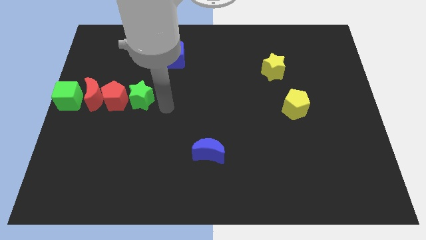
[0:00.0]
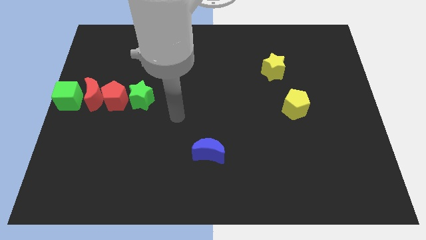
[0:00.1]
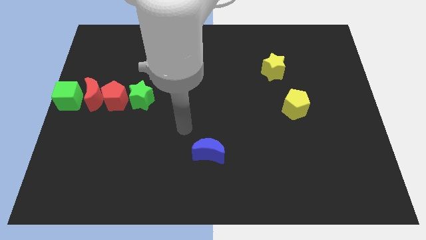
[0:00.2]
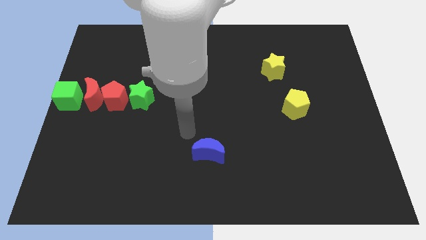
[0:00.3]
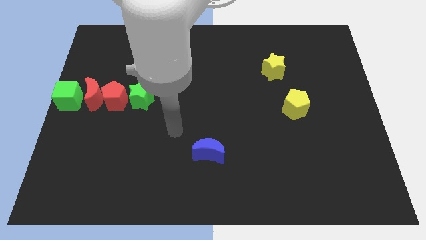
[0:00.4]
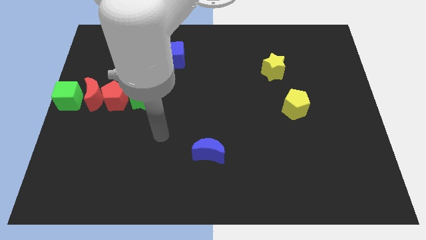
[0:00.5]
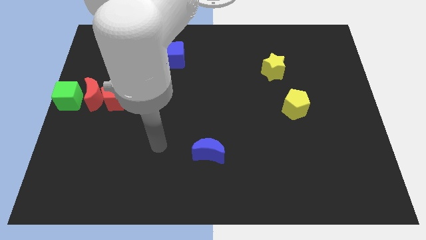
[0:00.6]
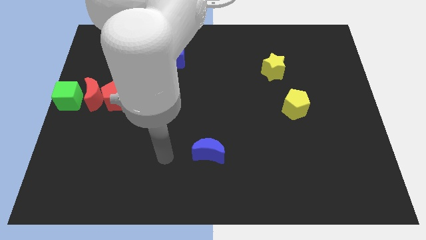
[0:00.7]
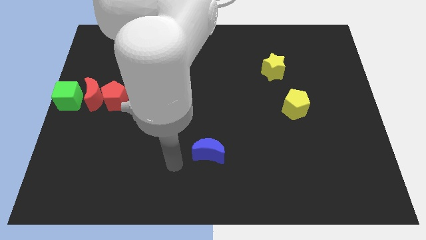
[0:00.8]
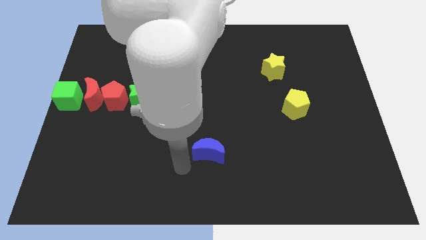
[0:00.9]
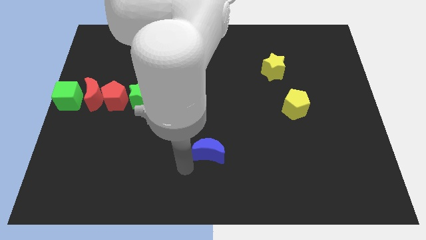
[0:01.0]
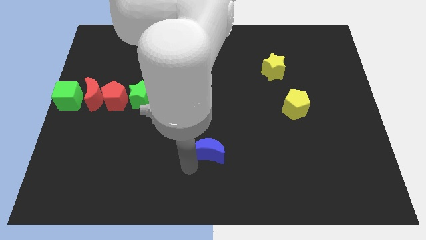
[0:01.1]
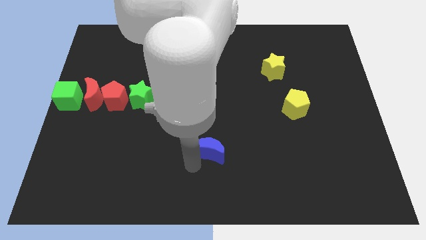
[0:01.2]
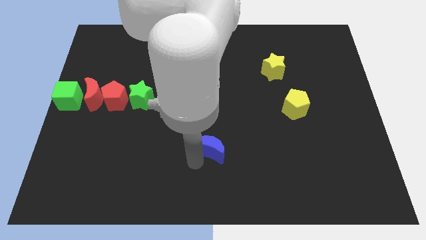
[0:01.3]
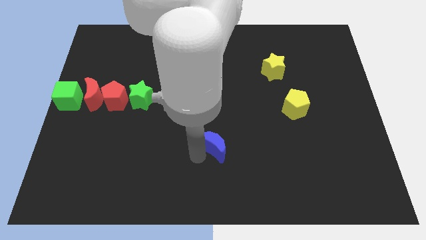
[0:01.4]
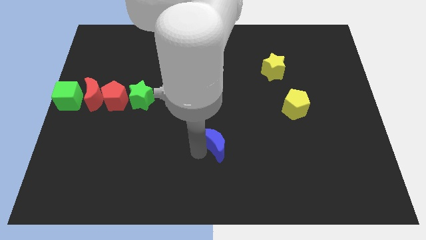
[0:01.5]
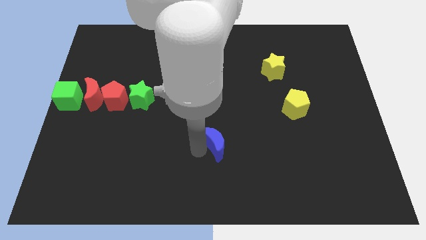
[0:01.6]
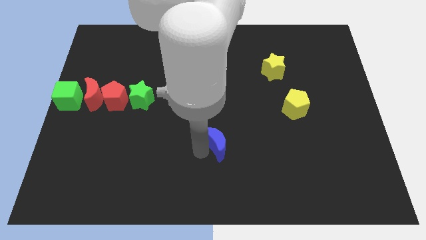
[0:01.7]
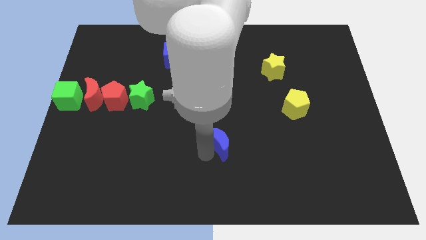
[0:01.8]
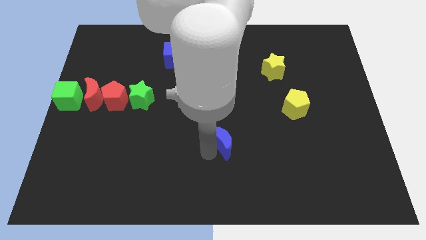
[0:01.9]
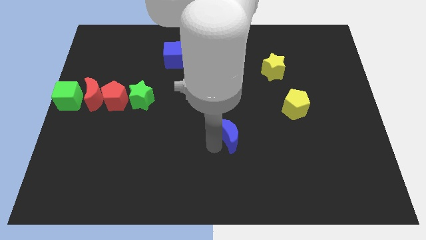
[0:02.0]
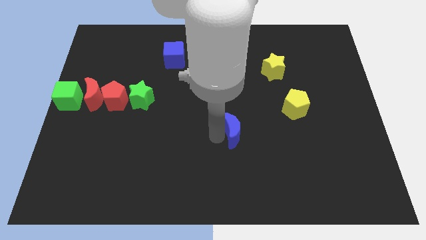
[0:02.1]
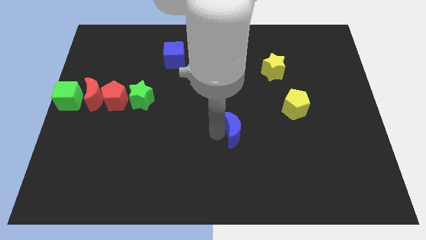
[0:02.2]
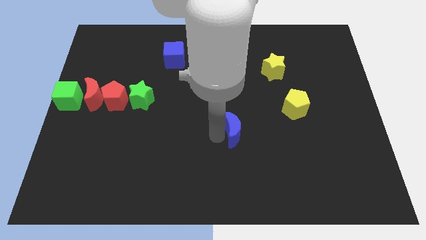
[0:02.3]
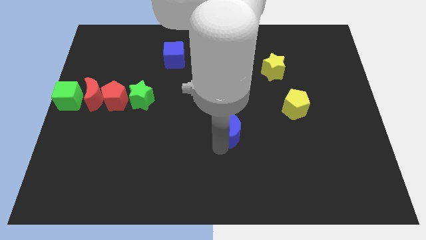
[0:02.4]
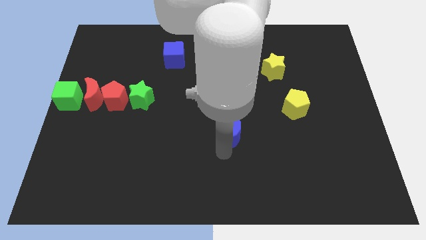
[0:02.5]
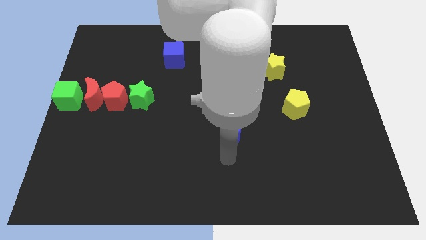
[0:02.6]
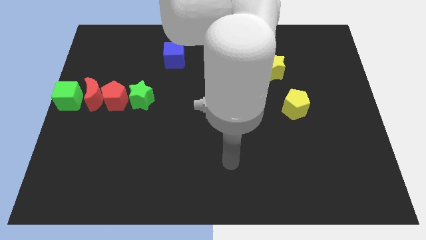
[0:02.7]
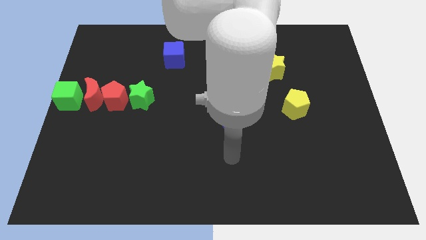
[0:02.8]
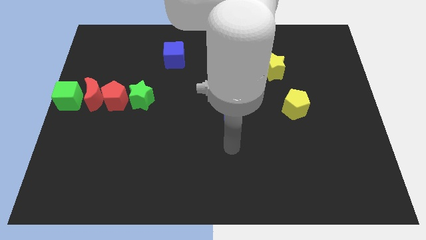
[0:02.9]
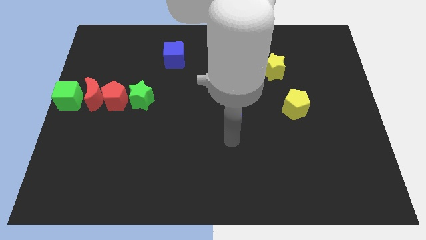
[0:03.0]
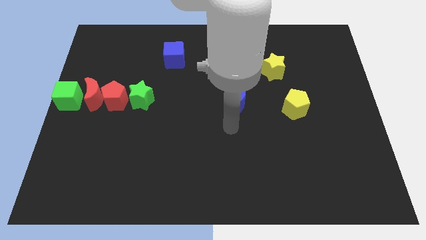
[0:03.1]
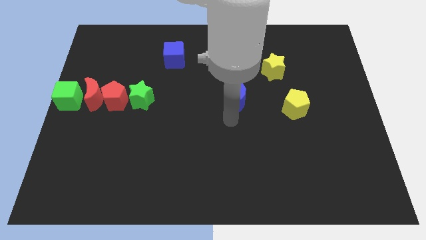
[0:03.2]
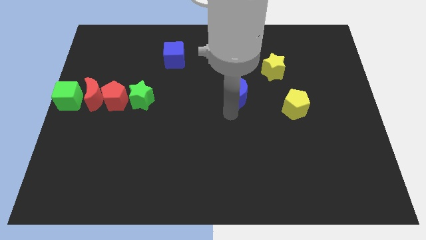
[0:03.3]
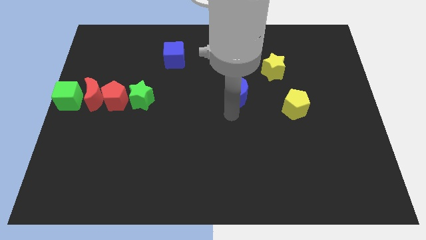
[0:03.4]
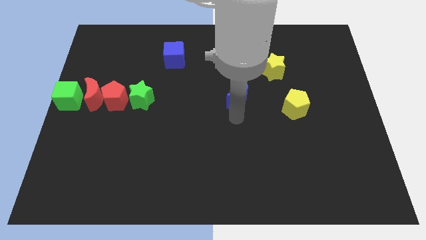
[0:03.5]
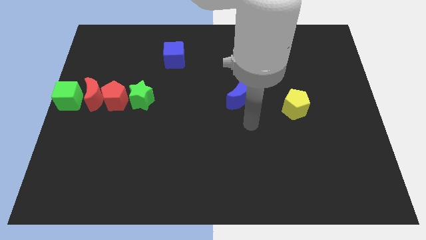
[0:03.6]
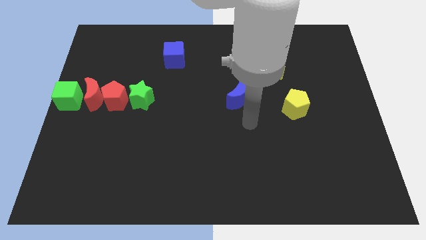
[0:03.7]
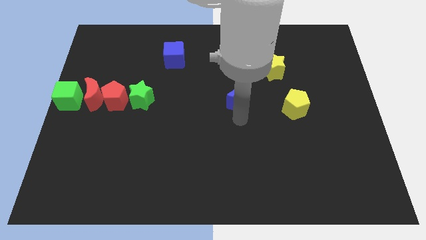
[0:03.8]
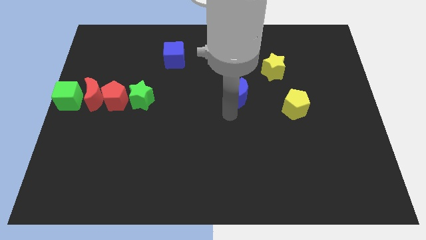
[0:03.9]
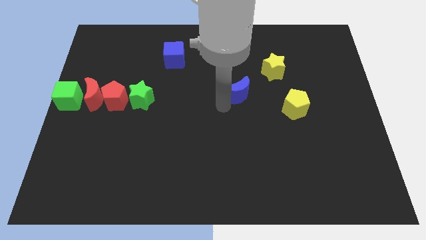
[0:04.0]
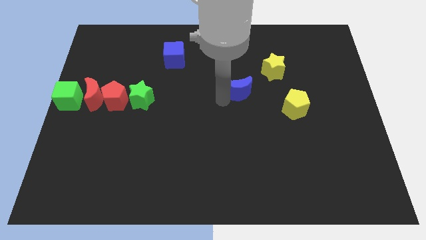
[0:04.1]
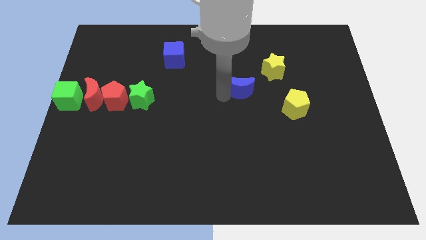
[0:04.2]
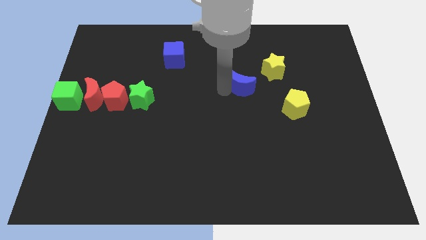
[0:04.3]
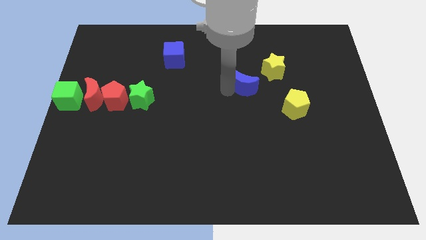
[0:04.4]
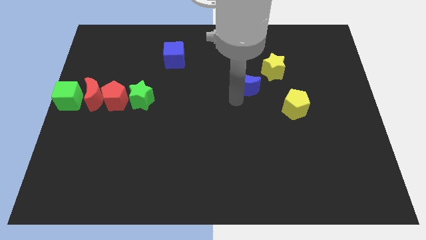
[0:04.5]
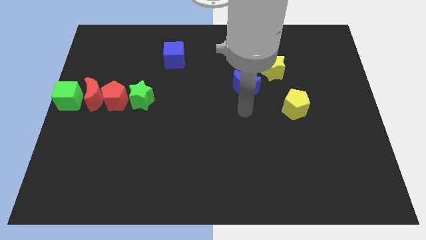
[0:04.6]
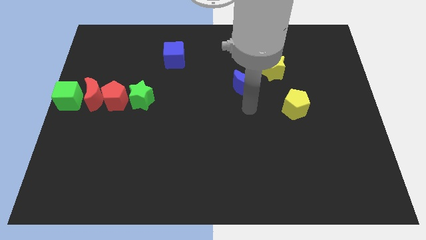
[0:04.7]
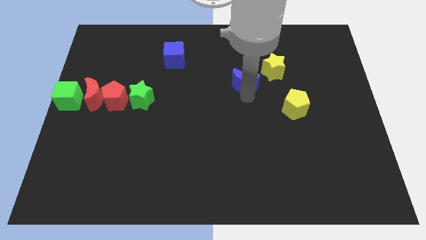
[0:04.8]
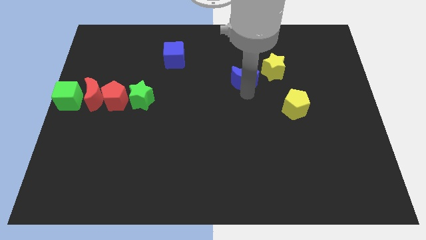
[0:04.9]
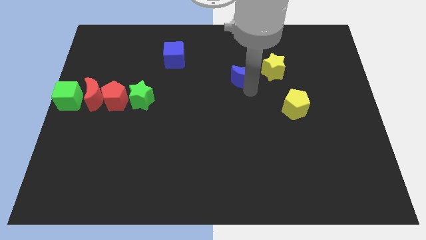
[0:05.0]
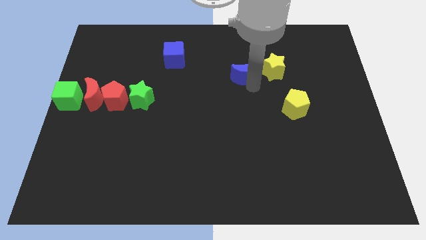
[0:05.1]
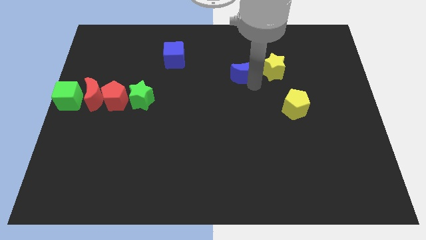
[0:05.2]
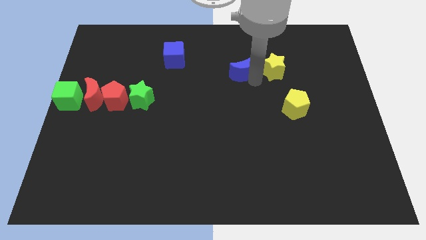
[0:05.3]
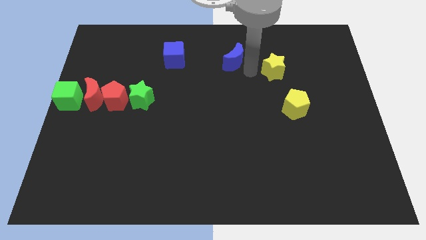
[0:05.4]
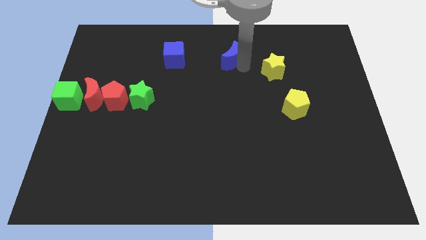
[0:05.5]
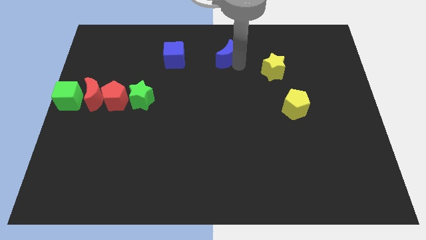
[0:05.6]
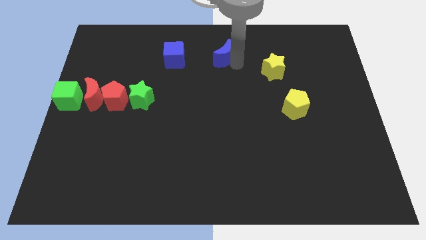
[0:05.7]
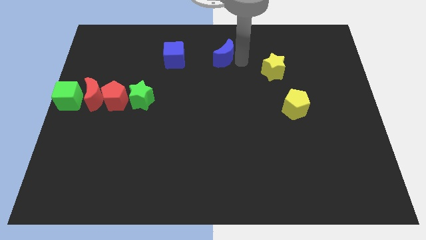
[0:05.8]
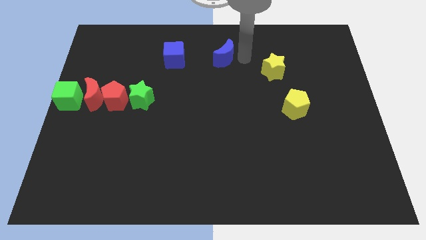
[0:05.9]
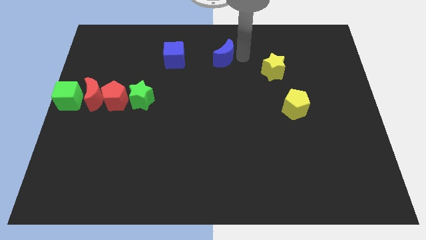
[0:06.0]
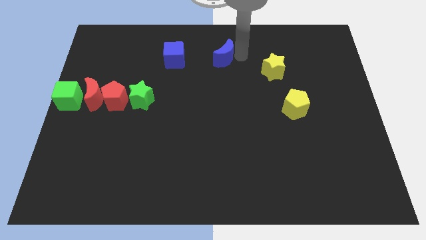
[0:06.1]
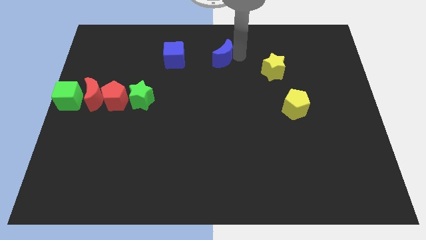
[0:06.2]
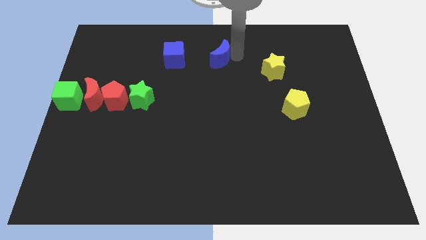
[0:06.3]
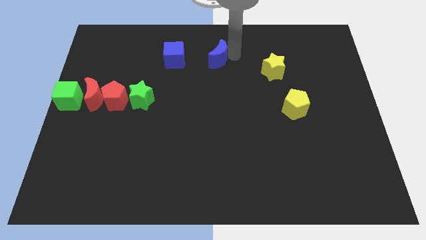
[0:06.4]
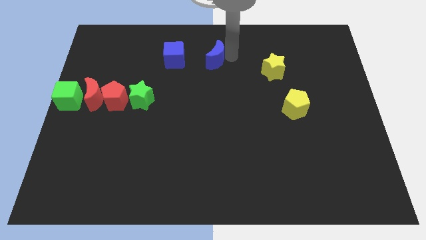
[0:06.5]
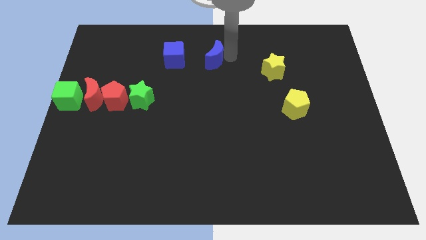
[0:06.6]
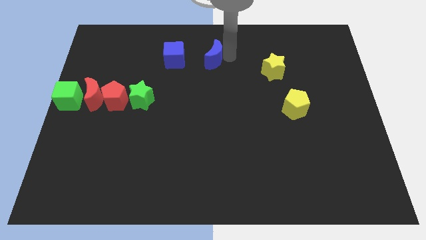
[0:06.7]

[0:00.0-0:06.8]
move the blue crescent to the top middle of the board

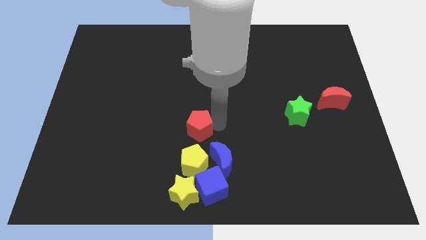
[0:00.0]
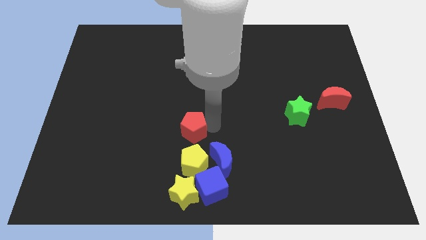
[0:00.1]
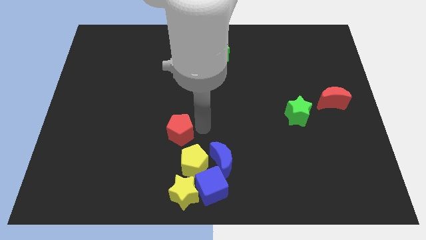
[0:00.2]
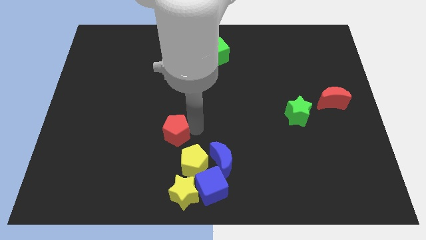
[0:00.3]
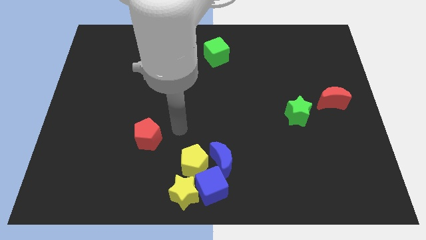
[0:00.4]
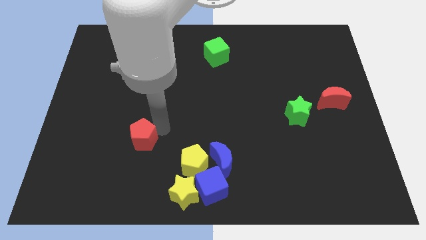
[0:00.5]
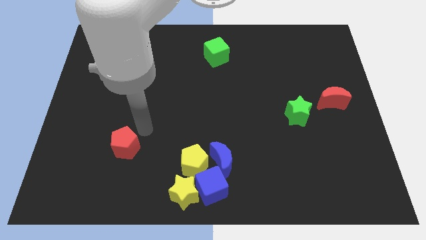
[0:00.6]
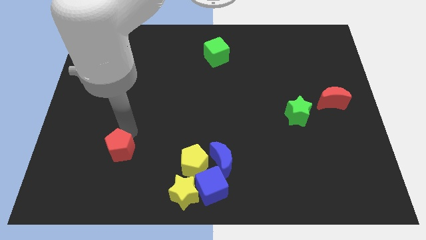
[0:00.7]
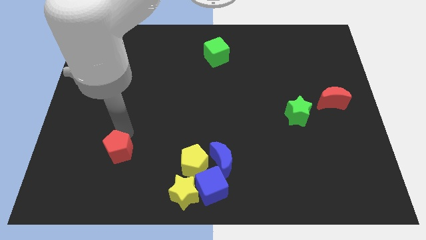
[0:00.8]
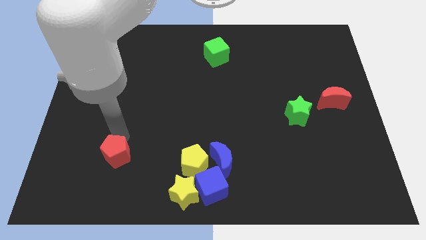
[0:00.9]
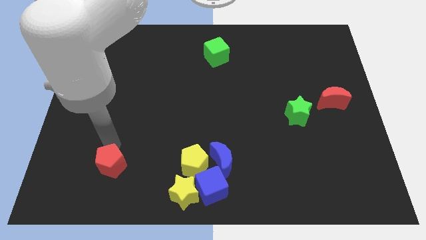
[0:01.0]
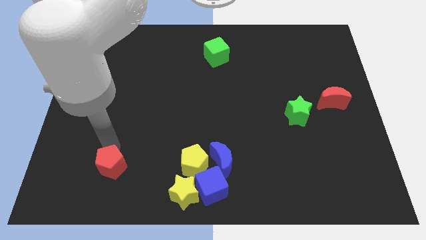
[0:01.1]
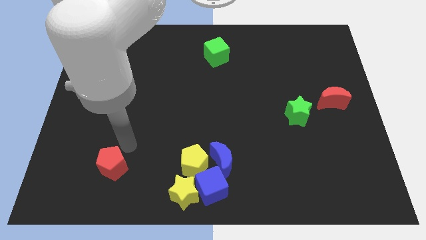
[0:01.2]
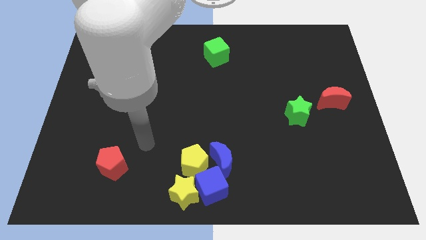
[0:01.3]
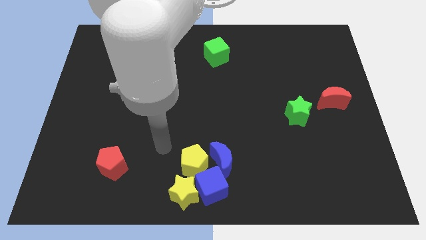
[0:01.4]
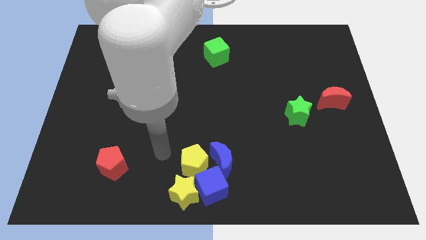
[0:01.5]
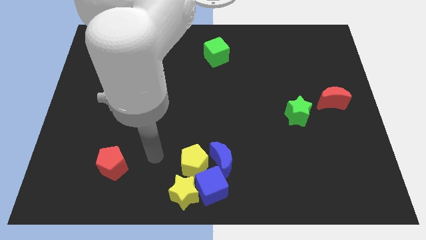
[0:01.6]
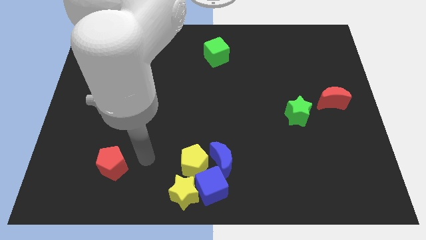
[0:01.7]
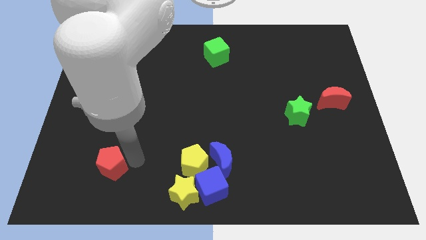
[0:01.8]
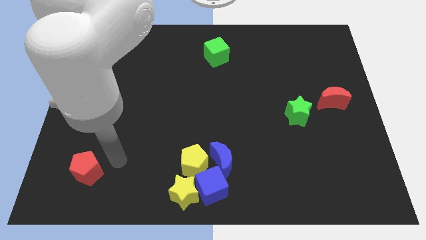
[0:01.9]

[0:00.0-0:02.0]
move the red pentagon to the bottom left corner of the board

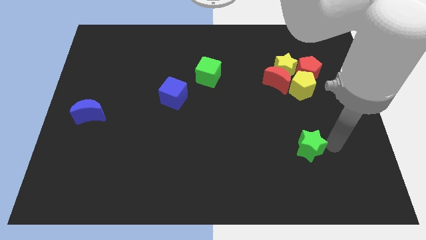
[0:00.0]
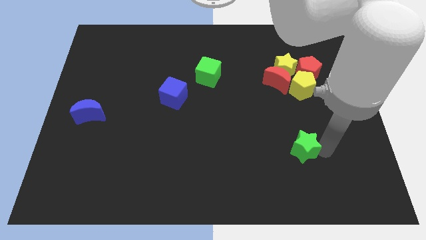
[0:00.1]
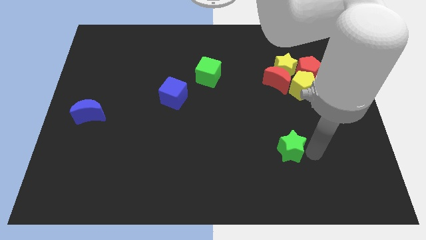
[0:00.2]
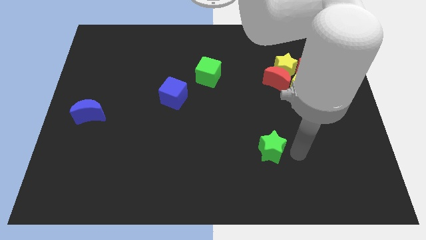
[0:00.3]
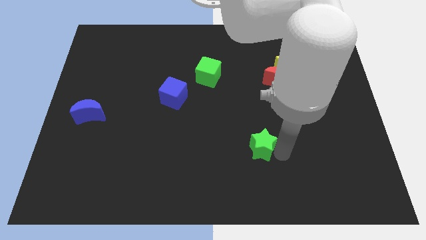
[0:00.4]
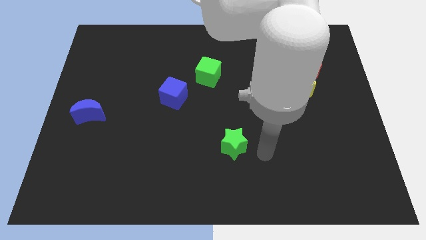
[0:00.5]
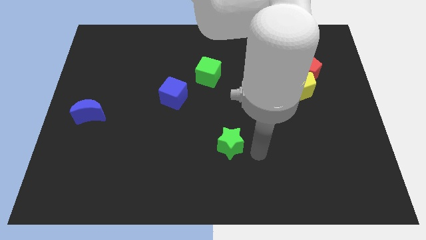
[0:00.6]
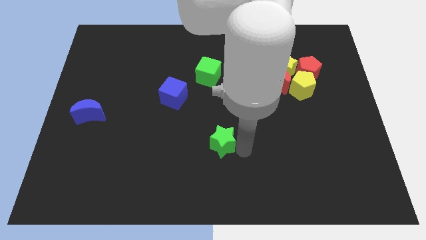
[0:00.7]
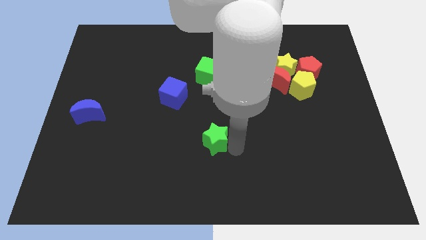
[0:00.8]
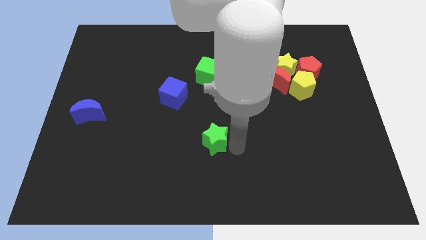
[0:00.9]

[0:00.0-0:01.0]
place green star to the center of the board
